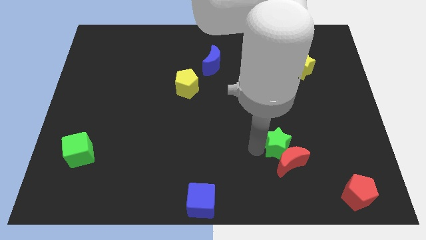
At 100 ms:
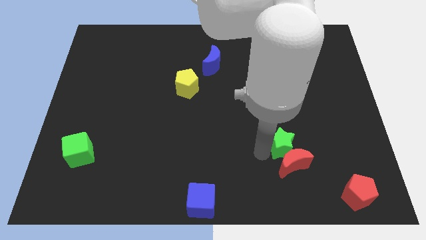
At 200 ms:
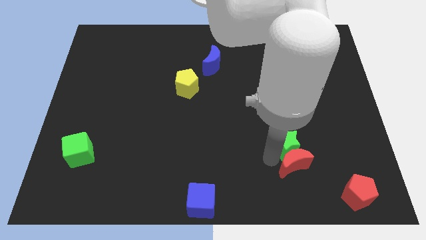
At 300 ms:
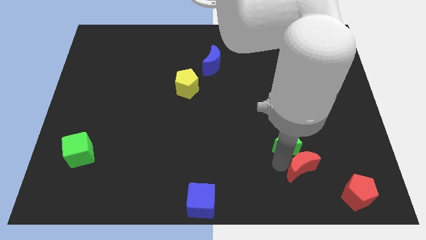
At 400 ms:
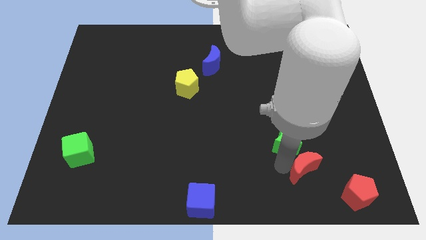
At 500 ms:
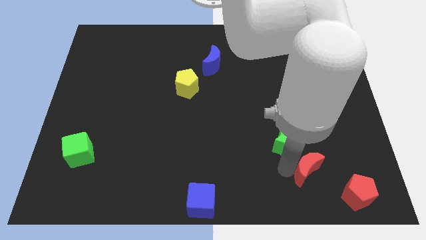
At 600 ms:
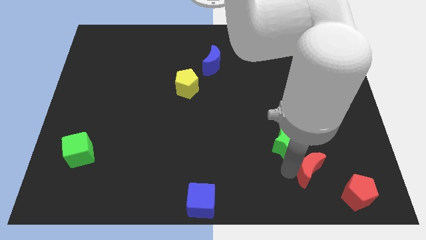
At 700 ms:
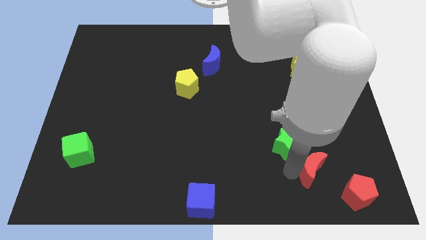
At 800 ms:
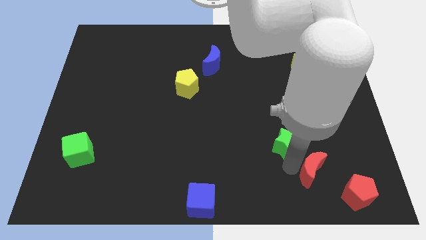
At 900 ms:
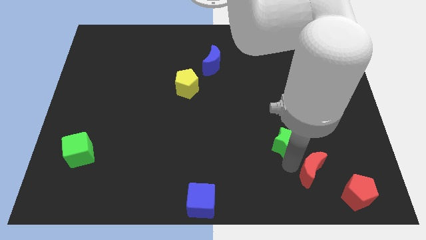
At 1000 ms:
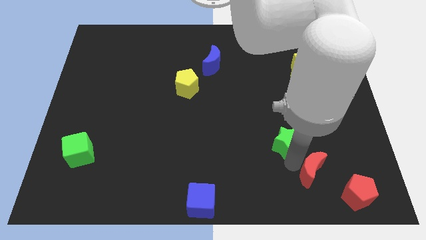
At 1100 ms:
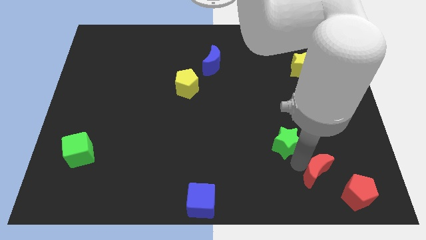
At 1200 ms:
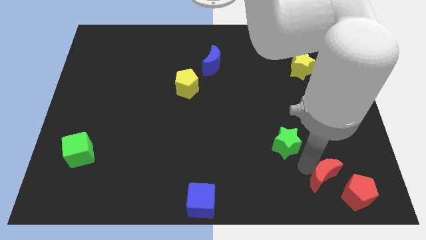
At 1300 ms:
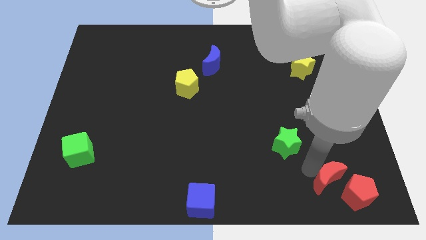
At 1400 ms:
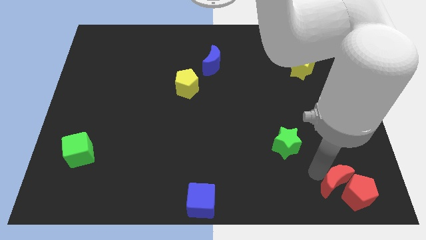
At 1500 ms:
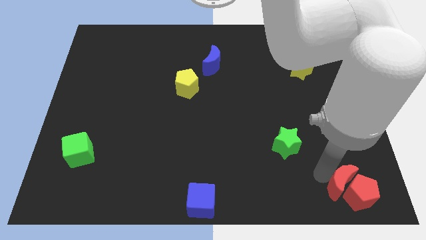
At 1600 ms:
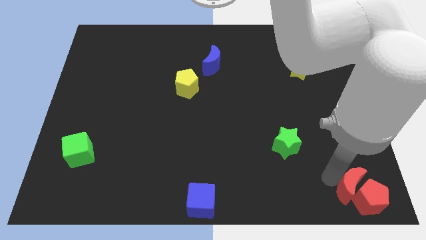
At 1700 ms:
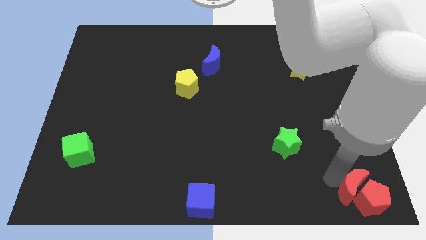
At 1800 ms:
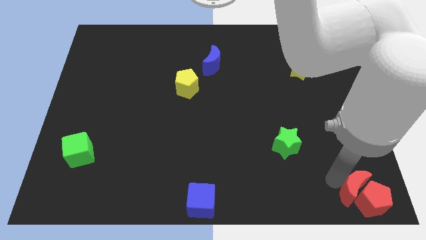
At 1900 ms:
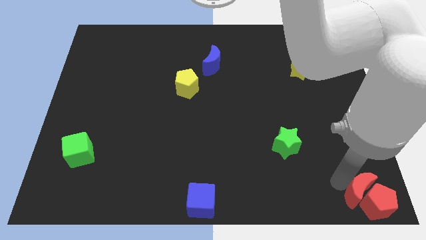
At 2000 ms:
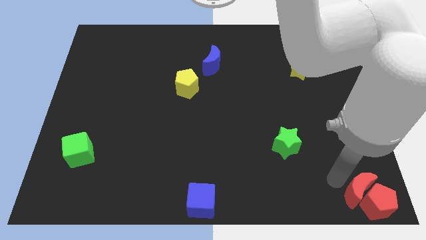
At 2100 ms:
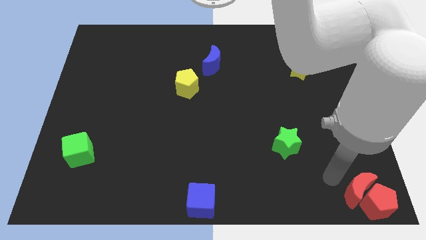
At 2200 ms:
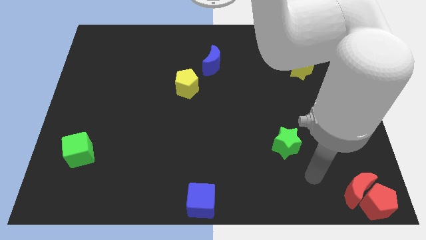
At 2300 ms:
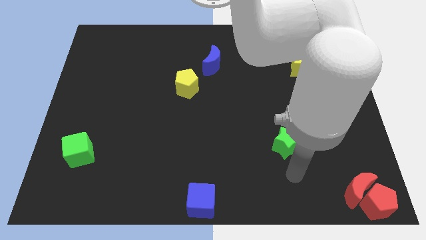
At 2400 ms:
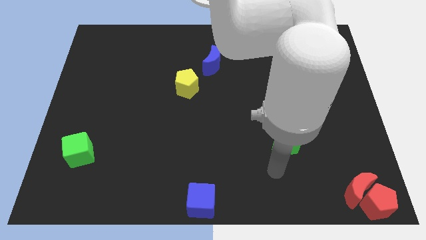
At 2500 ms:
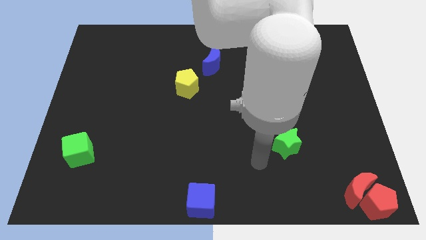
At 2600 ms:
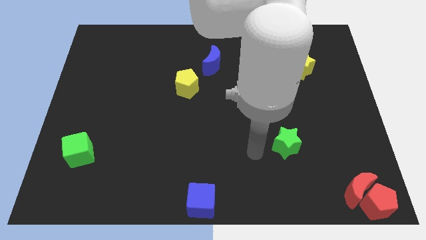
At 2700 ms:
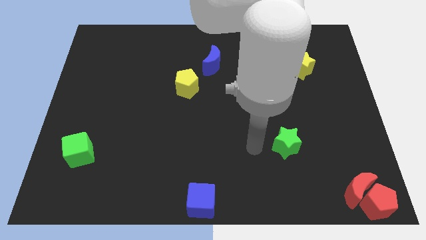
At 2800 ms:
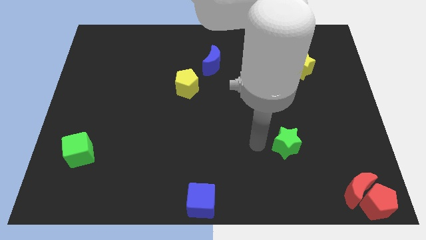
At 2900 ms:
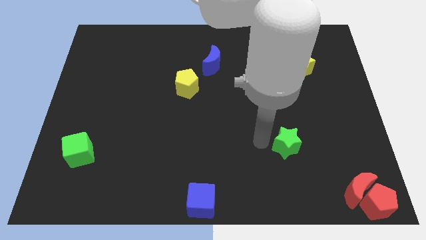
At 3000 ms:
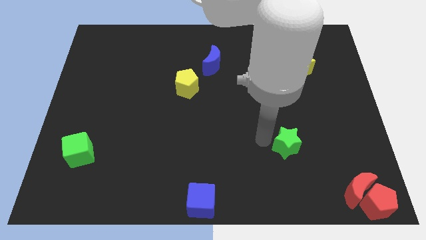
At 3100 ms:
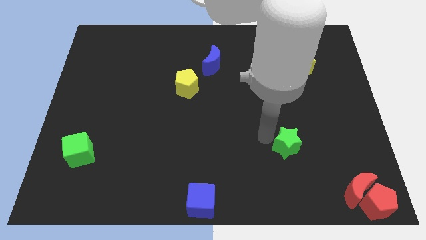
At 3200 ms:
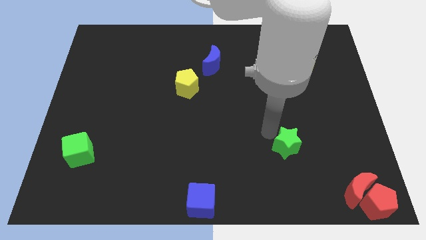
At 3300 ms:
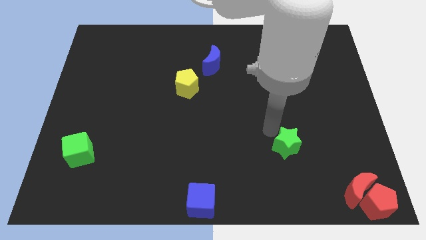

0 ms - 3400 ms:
separate the green star from the red crescent

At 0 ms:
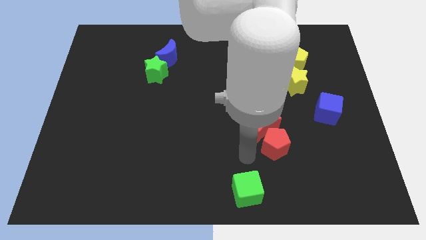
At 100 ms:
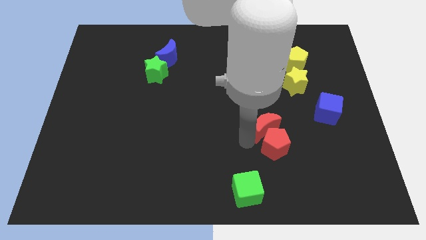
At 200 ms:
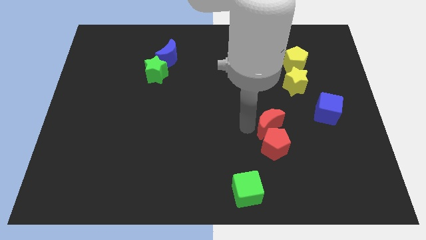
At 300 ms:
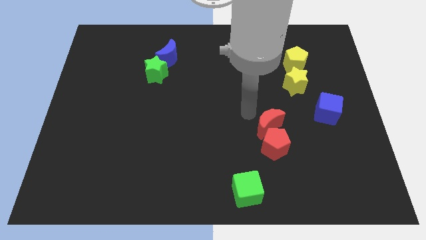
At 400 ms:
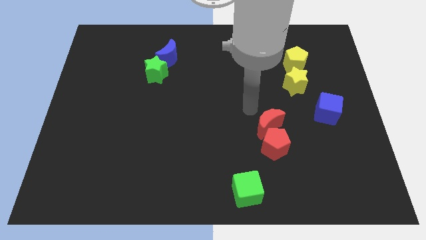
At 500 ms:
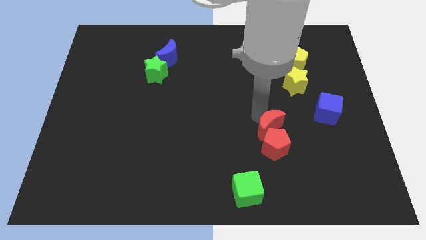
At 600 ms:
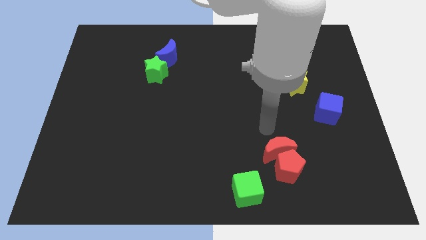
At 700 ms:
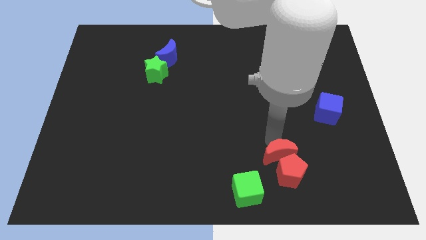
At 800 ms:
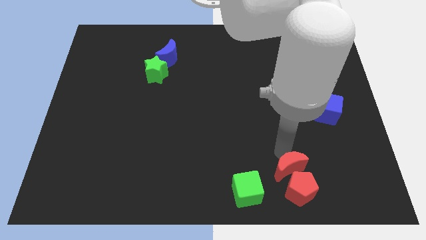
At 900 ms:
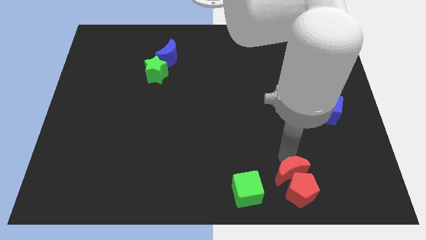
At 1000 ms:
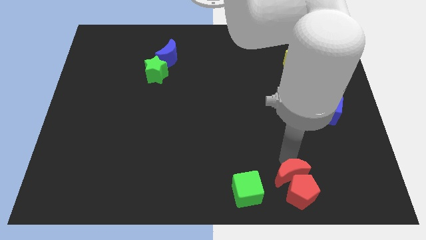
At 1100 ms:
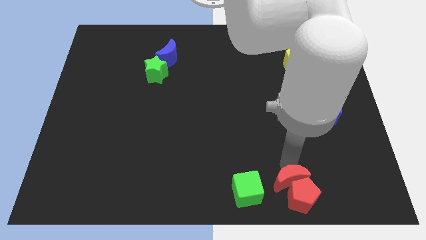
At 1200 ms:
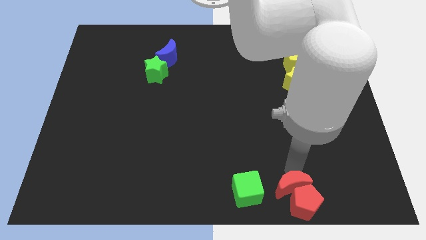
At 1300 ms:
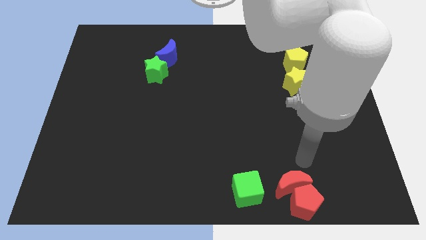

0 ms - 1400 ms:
push the red blocks towards the bottom of the board

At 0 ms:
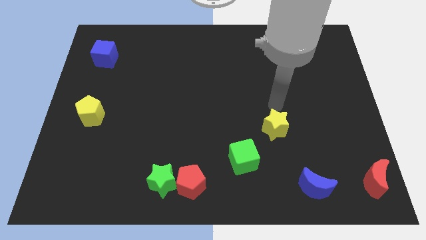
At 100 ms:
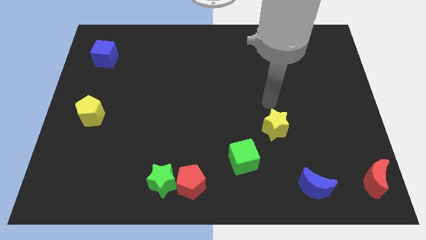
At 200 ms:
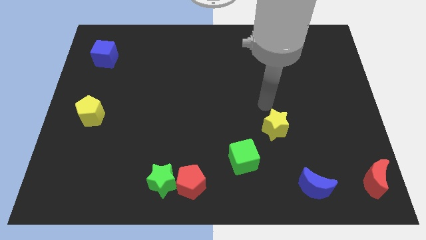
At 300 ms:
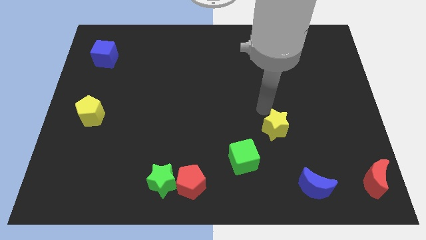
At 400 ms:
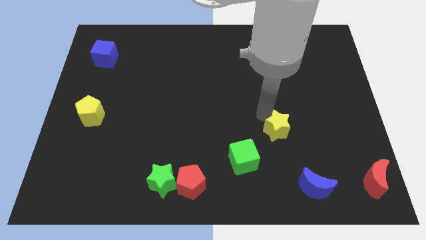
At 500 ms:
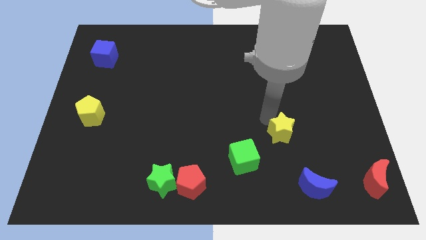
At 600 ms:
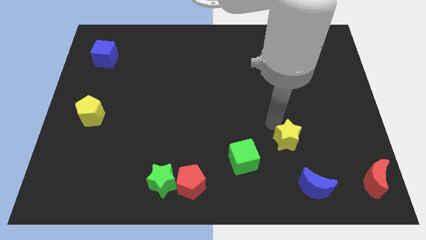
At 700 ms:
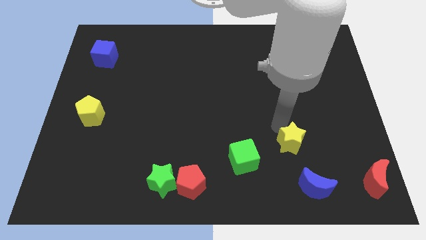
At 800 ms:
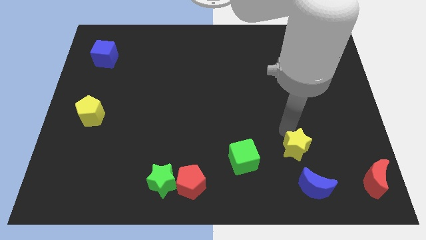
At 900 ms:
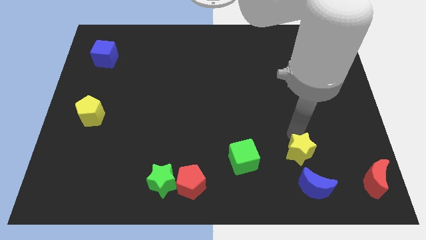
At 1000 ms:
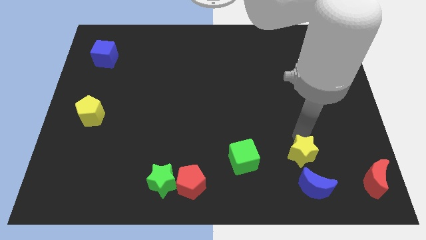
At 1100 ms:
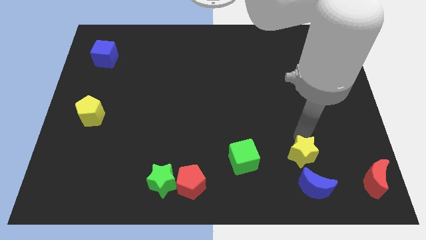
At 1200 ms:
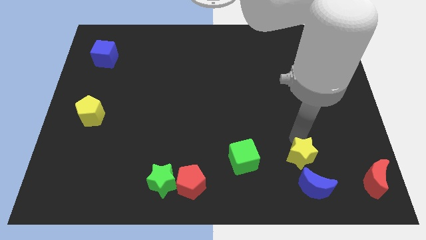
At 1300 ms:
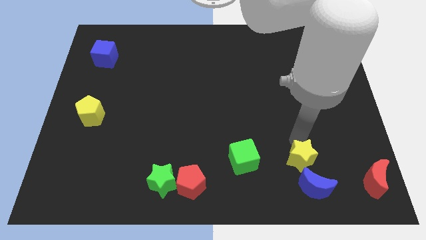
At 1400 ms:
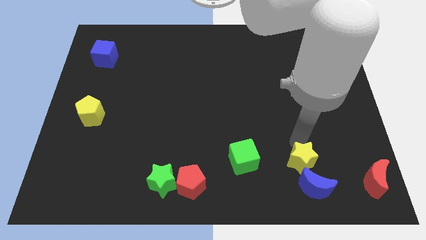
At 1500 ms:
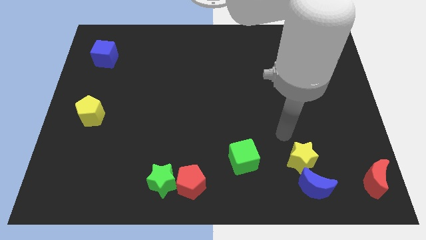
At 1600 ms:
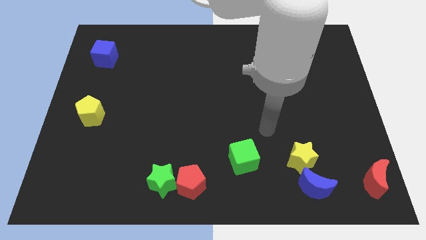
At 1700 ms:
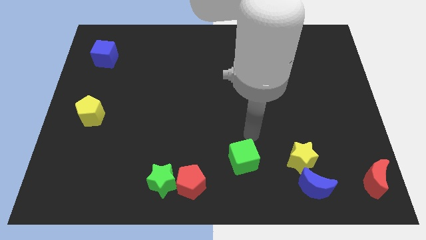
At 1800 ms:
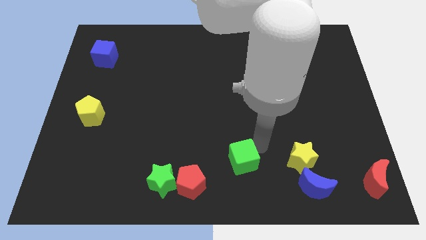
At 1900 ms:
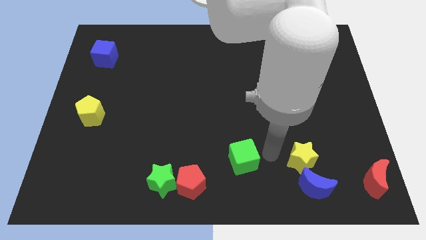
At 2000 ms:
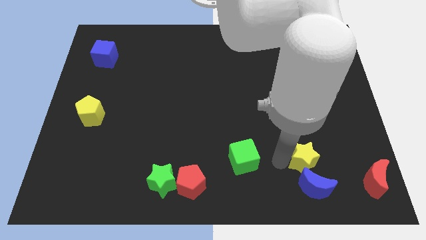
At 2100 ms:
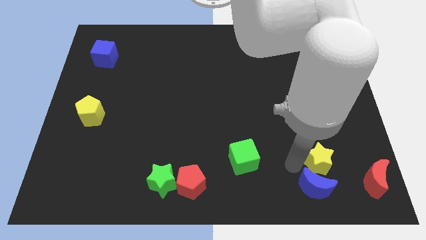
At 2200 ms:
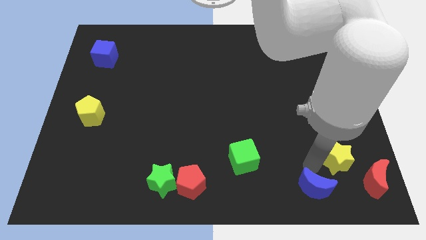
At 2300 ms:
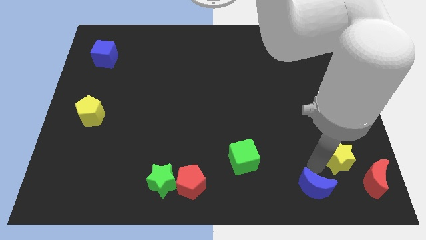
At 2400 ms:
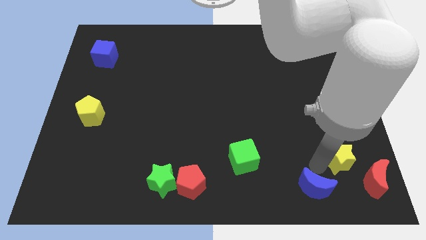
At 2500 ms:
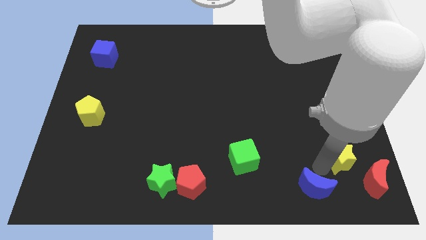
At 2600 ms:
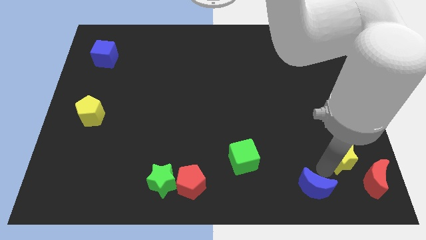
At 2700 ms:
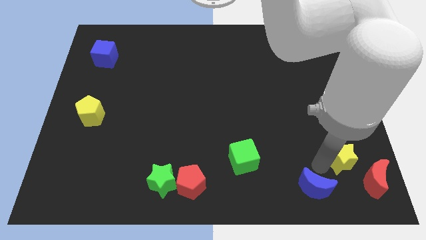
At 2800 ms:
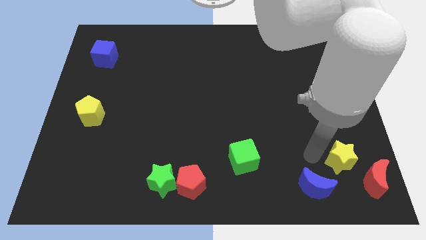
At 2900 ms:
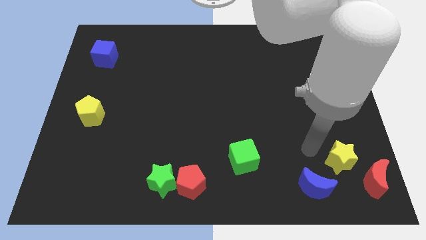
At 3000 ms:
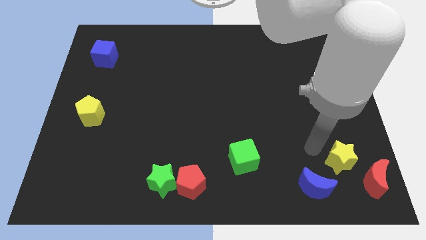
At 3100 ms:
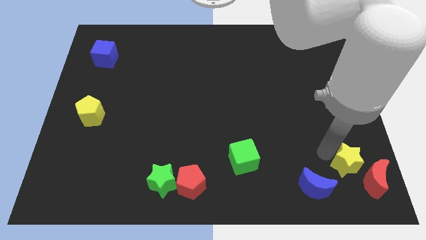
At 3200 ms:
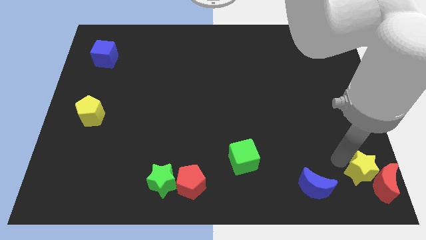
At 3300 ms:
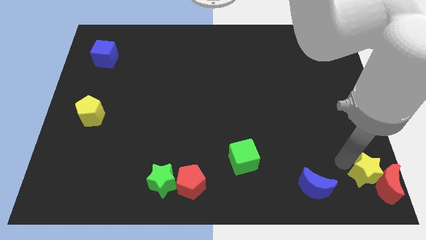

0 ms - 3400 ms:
place yellow star to the bottom right corner of the board

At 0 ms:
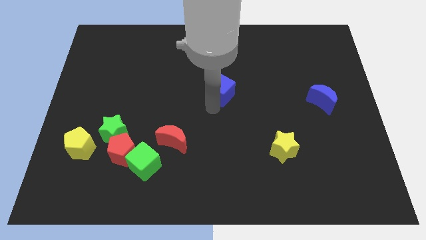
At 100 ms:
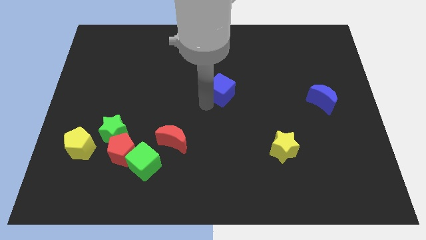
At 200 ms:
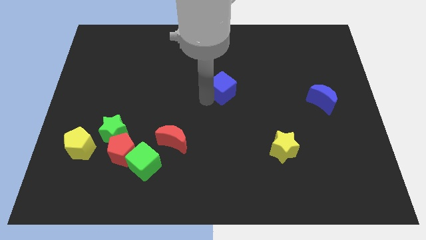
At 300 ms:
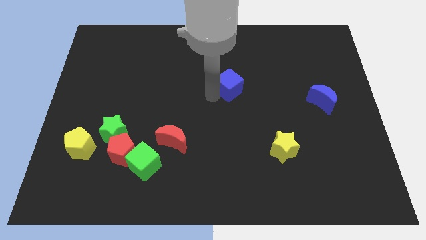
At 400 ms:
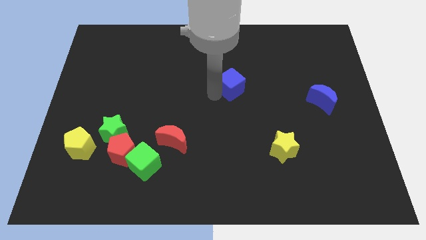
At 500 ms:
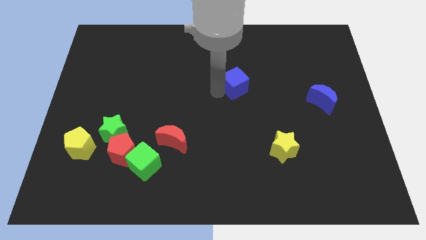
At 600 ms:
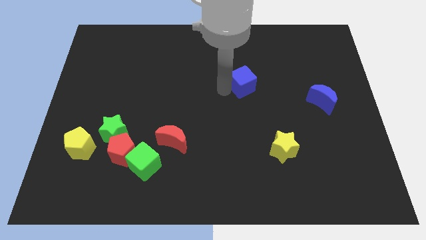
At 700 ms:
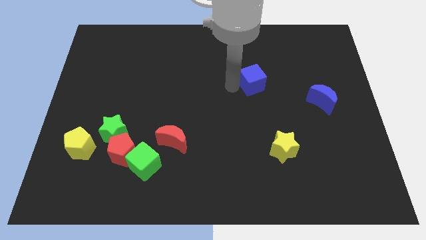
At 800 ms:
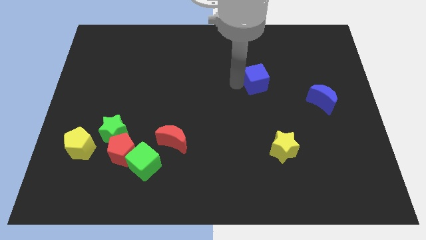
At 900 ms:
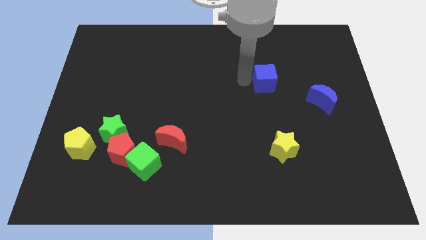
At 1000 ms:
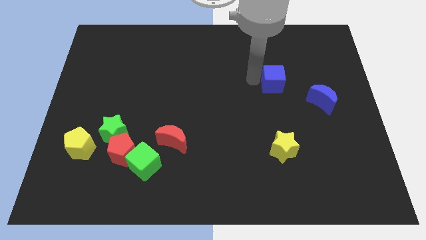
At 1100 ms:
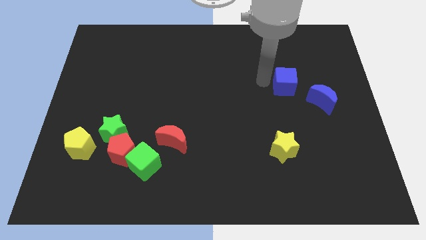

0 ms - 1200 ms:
place blue cube vertically above yellow star
